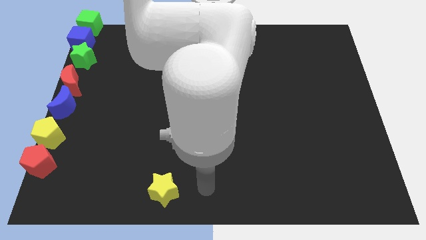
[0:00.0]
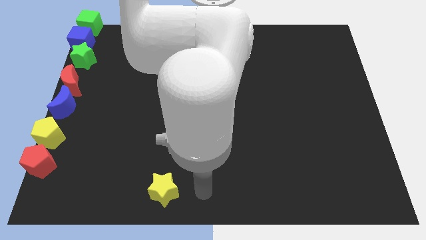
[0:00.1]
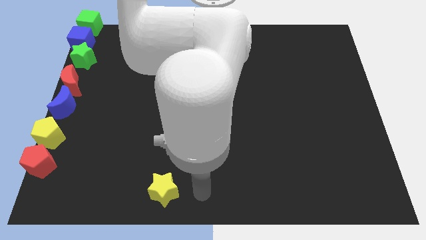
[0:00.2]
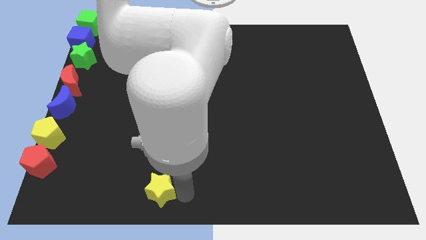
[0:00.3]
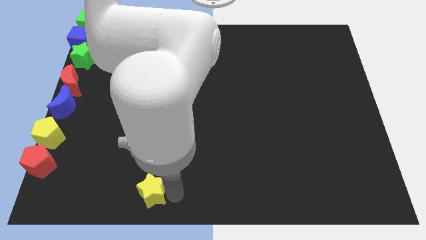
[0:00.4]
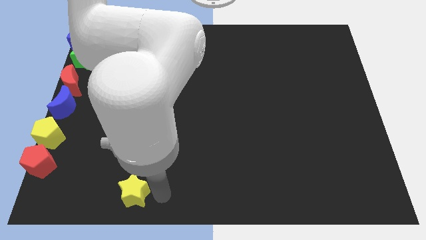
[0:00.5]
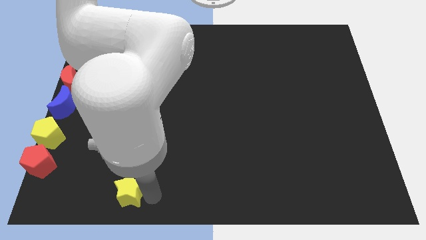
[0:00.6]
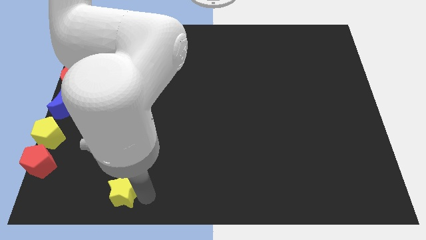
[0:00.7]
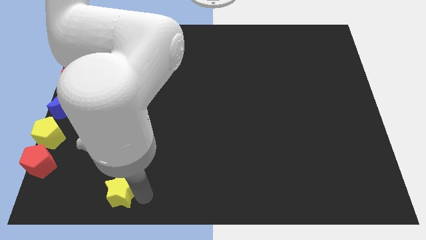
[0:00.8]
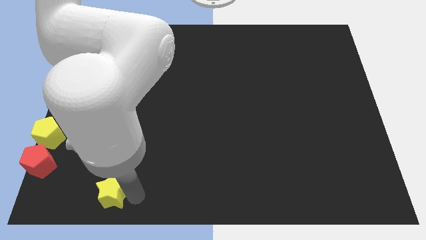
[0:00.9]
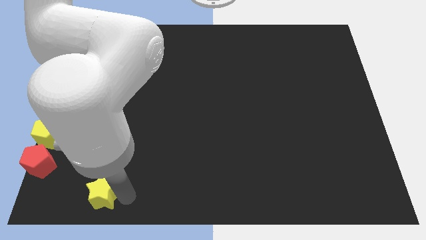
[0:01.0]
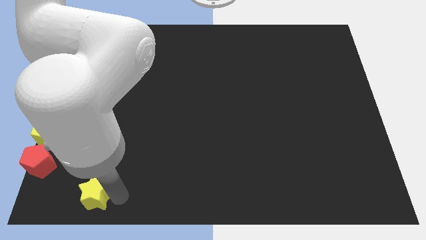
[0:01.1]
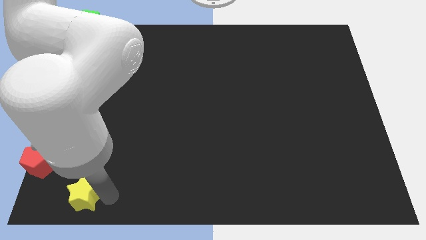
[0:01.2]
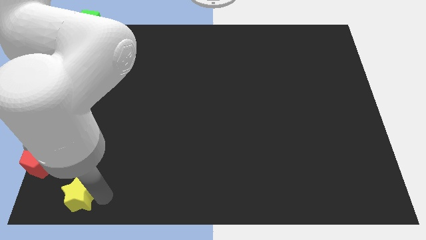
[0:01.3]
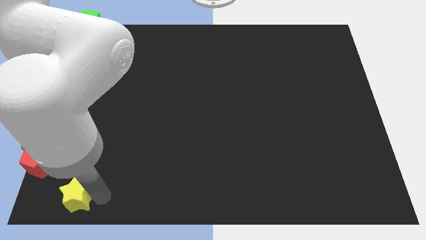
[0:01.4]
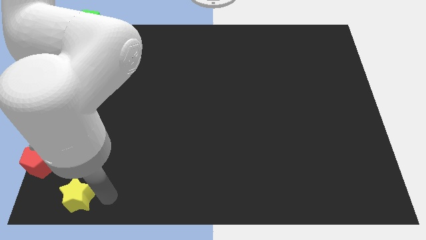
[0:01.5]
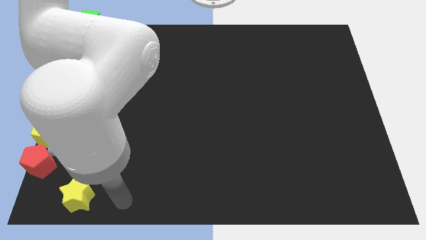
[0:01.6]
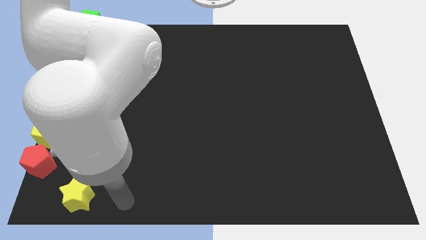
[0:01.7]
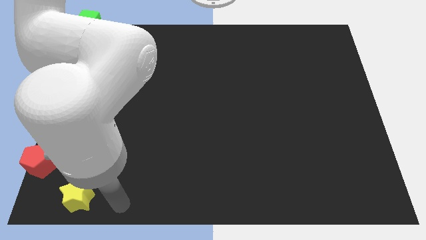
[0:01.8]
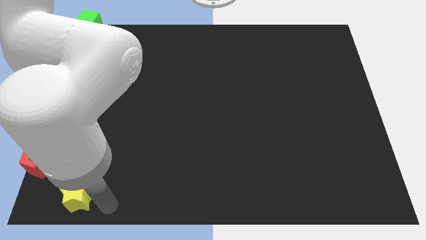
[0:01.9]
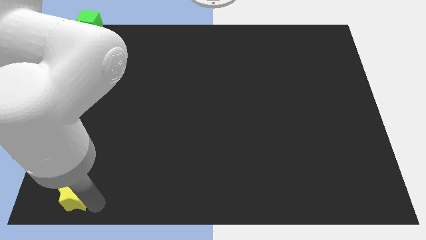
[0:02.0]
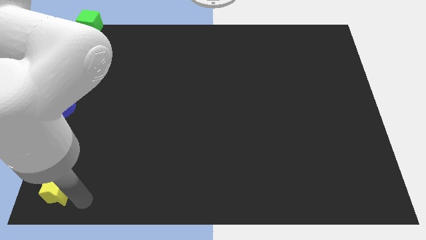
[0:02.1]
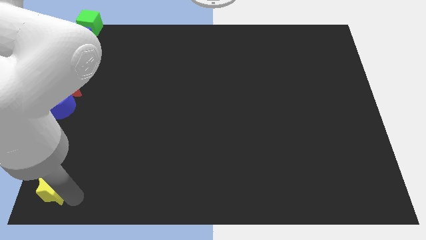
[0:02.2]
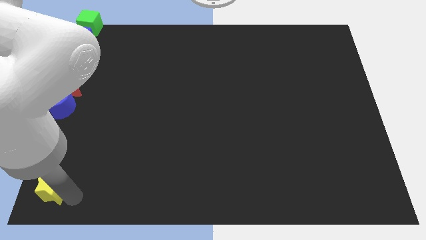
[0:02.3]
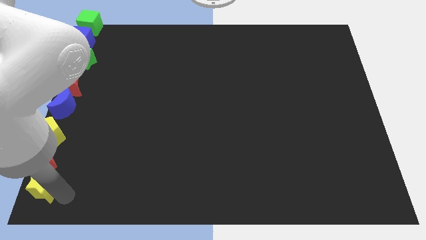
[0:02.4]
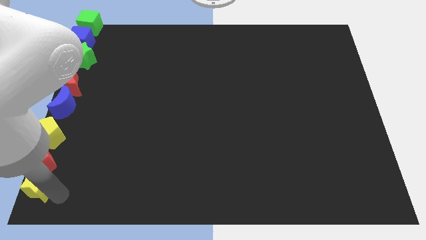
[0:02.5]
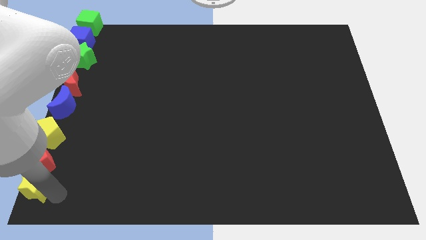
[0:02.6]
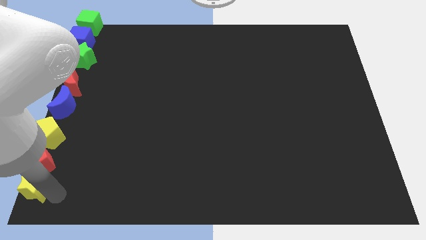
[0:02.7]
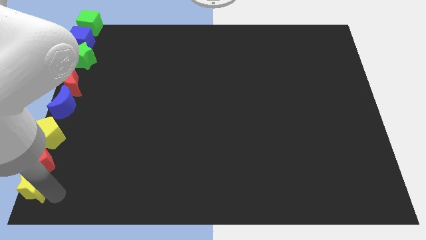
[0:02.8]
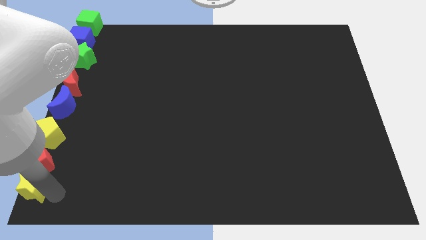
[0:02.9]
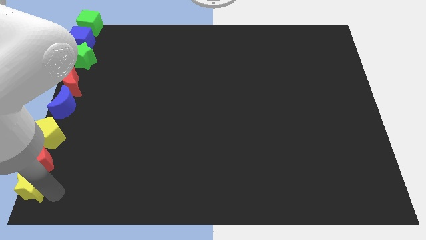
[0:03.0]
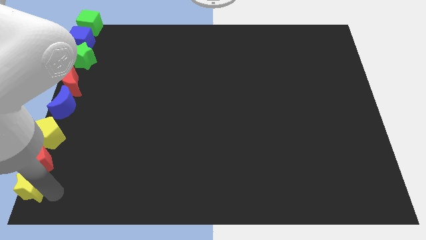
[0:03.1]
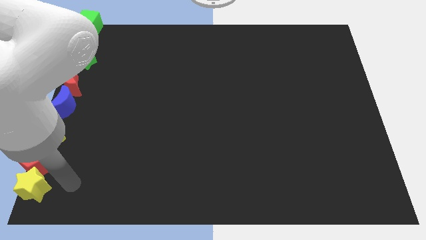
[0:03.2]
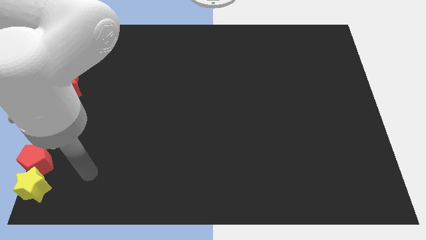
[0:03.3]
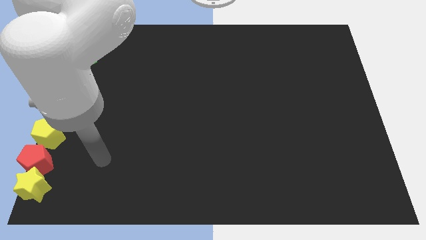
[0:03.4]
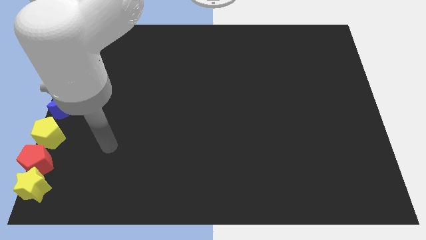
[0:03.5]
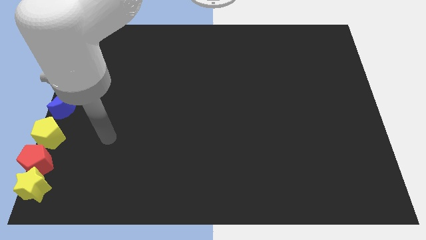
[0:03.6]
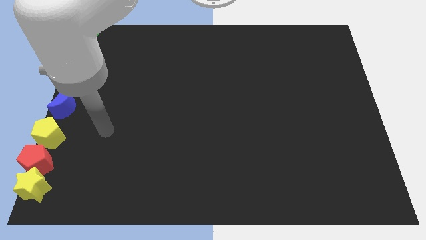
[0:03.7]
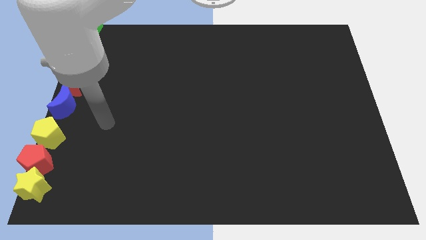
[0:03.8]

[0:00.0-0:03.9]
place the yellow star to the bottom of the red pentagon

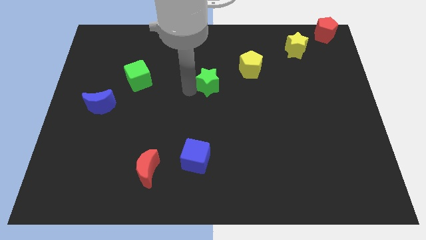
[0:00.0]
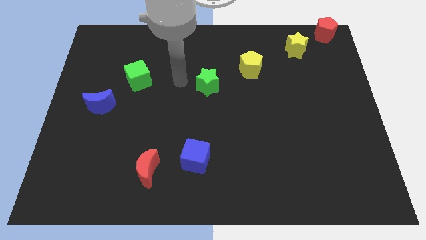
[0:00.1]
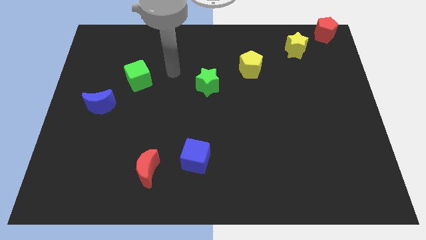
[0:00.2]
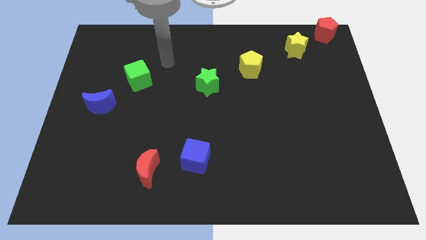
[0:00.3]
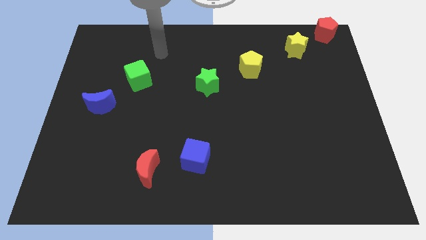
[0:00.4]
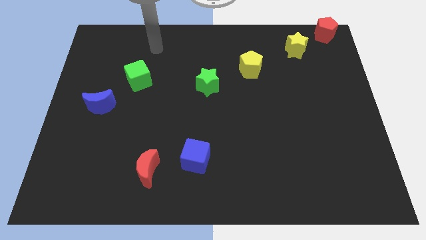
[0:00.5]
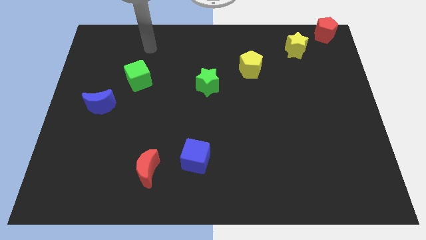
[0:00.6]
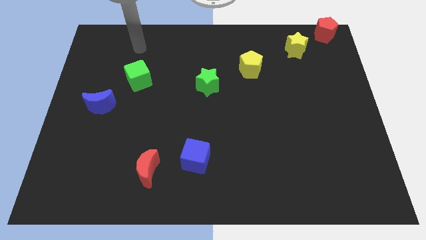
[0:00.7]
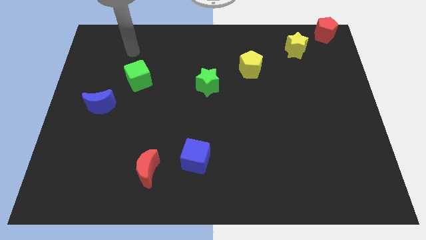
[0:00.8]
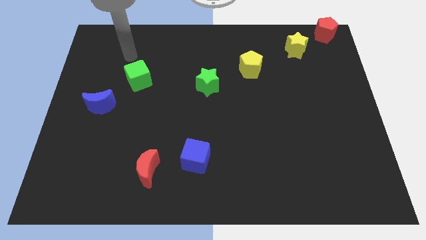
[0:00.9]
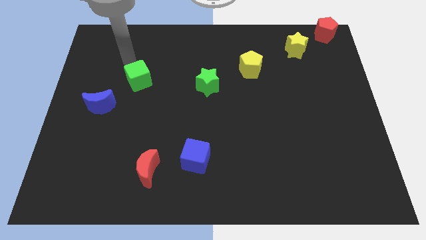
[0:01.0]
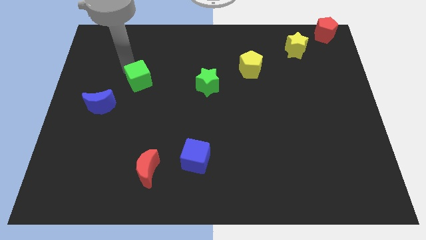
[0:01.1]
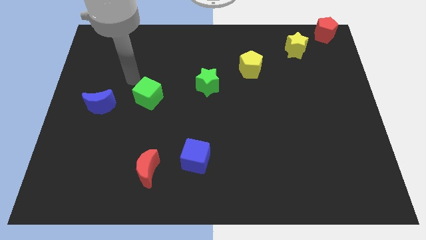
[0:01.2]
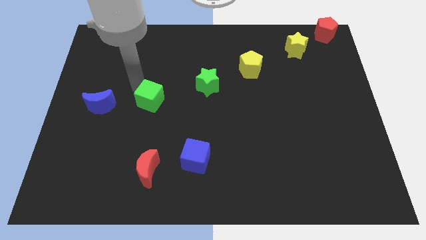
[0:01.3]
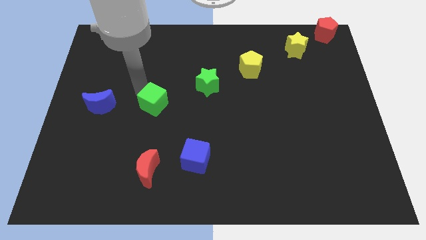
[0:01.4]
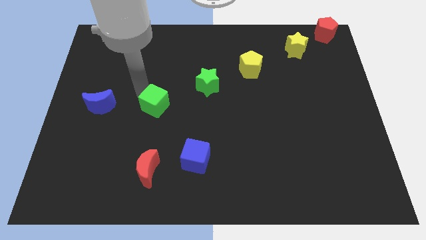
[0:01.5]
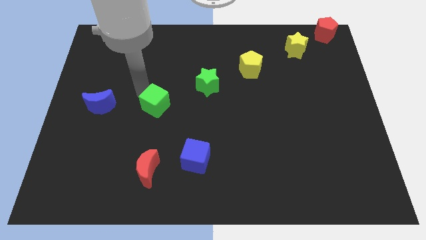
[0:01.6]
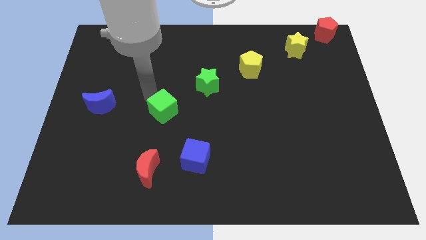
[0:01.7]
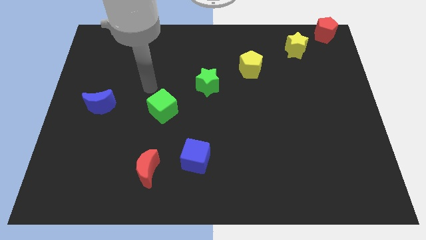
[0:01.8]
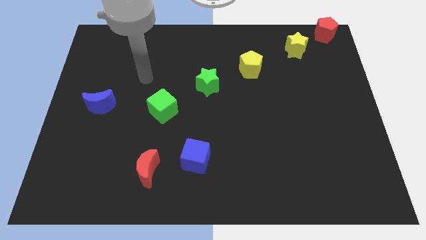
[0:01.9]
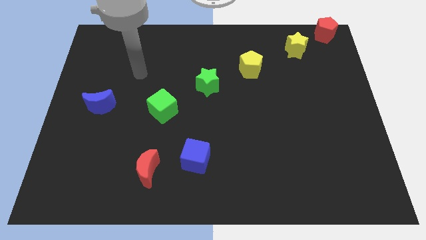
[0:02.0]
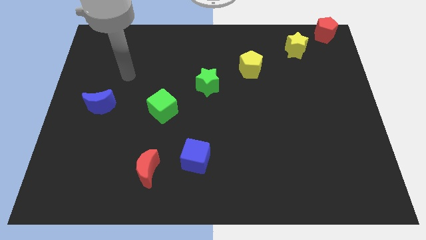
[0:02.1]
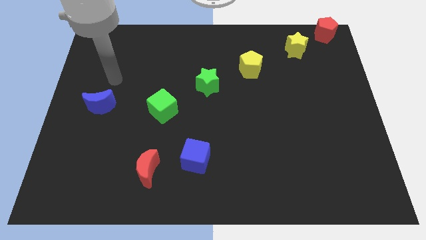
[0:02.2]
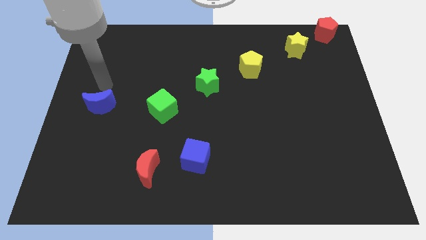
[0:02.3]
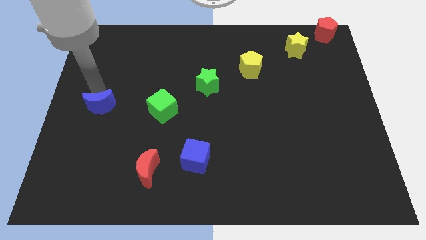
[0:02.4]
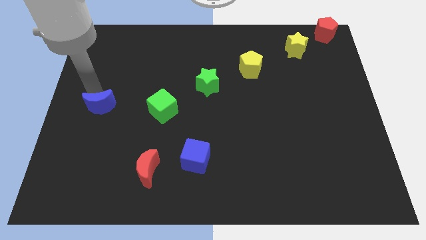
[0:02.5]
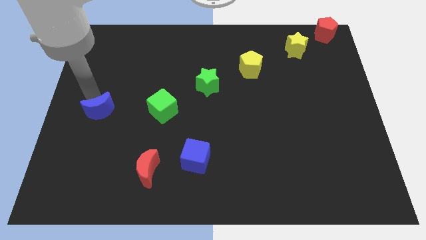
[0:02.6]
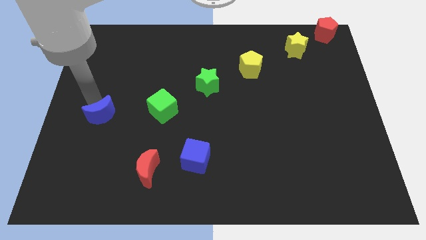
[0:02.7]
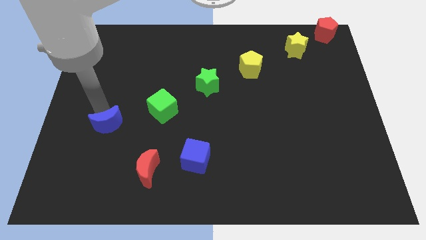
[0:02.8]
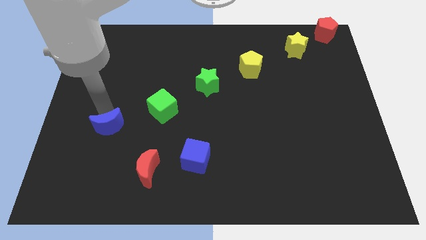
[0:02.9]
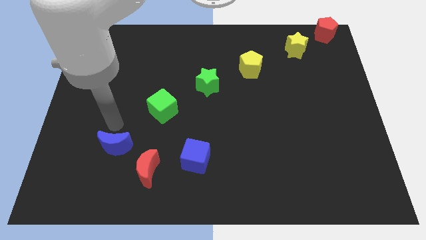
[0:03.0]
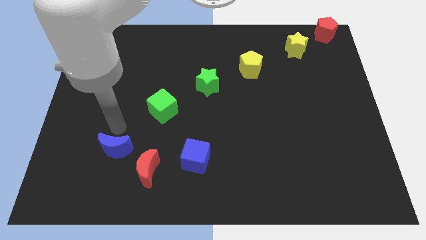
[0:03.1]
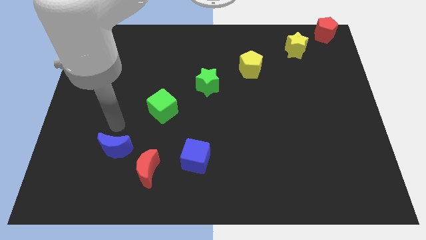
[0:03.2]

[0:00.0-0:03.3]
move the green cube and blue crescent diagonally on the bottom left side of the green star

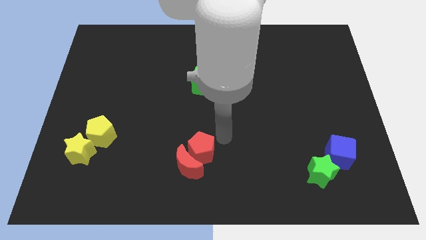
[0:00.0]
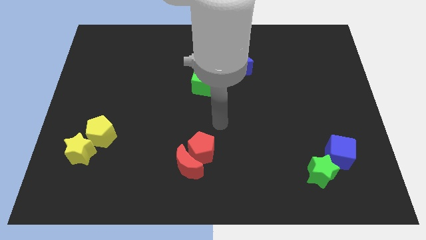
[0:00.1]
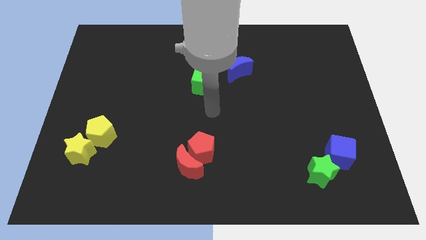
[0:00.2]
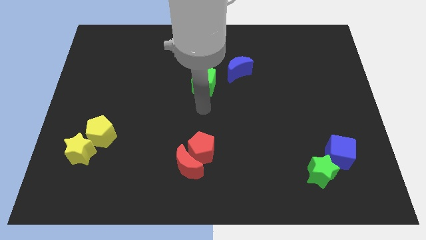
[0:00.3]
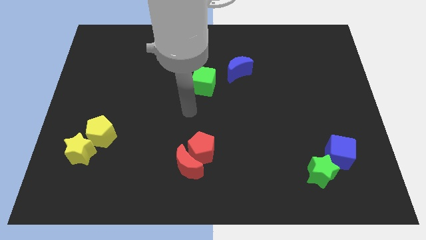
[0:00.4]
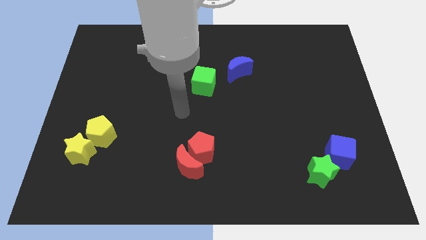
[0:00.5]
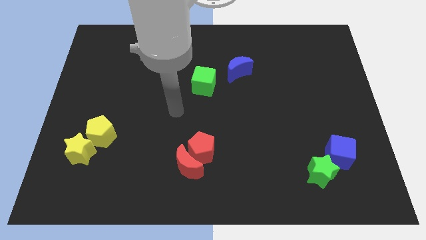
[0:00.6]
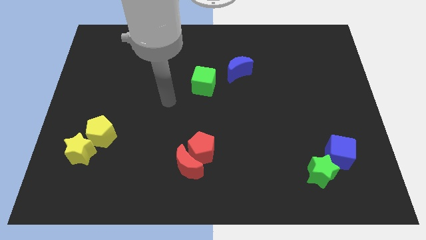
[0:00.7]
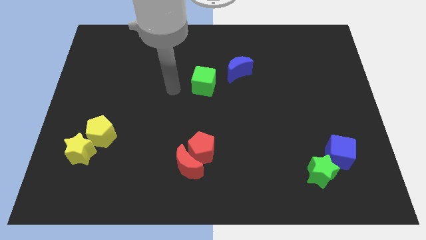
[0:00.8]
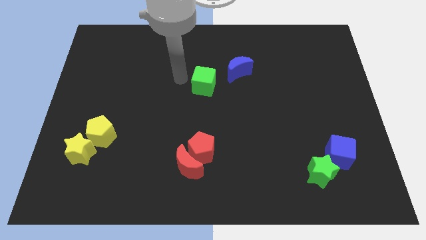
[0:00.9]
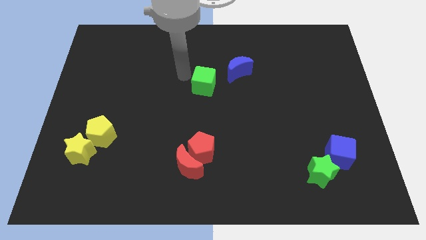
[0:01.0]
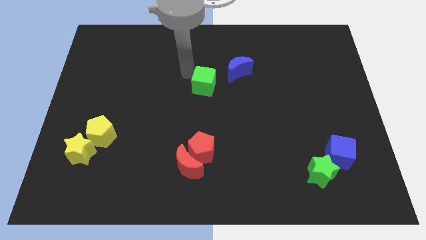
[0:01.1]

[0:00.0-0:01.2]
move your arm towards the green cube

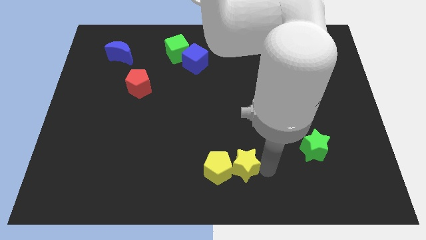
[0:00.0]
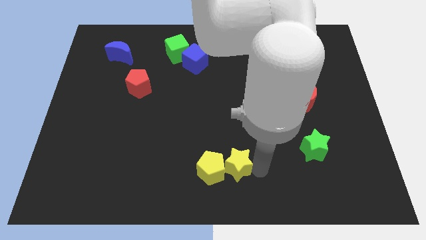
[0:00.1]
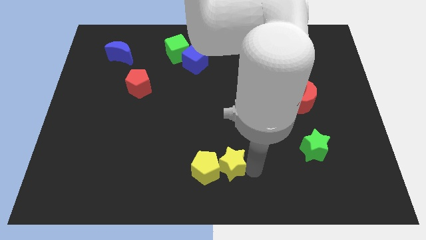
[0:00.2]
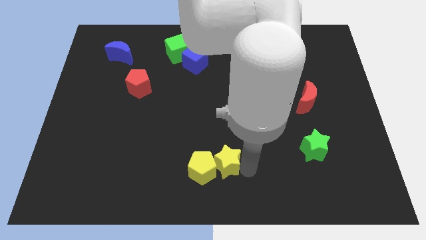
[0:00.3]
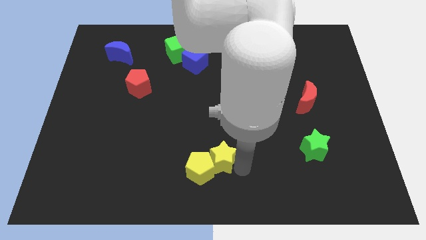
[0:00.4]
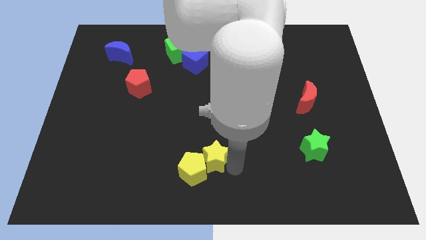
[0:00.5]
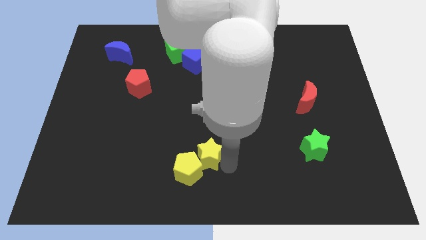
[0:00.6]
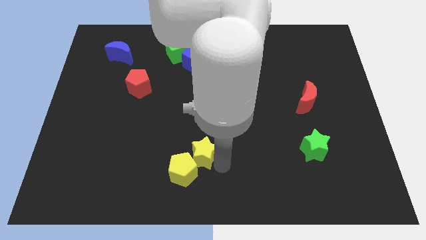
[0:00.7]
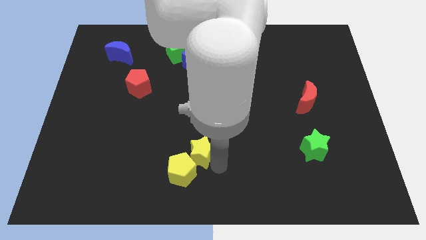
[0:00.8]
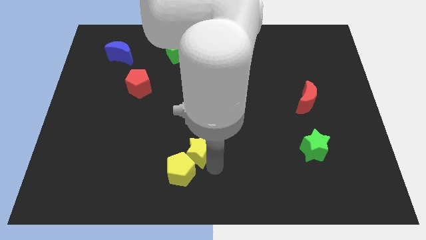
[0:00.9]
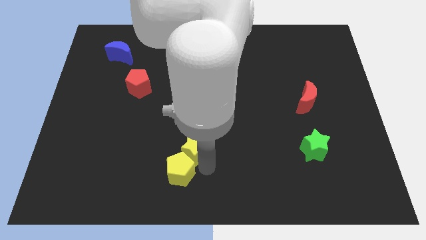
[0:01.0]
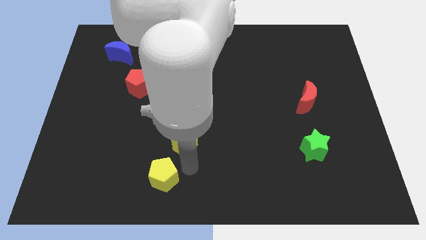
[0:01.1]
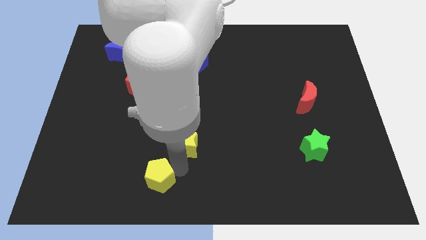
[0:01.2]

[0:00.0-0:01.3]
push the yellow pentagon with the yellow star
